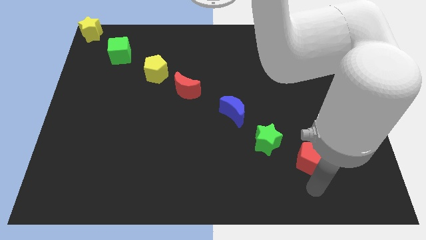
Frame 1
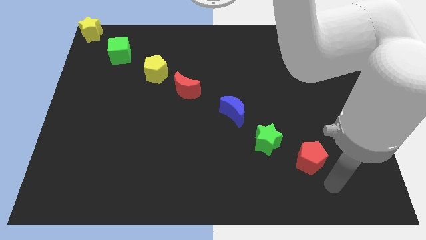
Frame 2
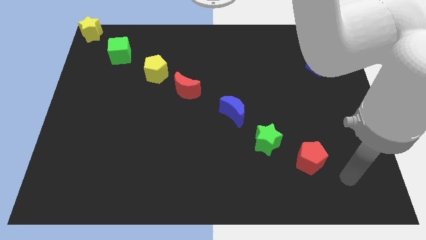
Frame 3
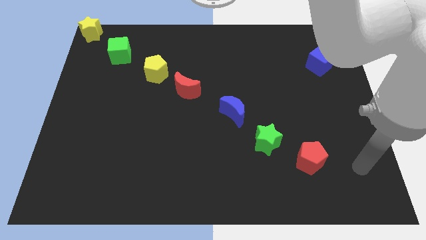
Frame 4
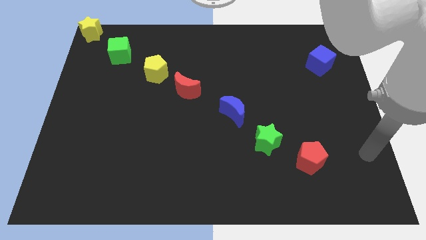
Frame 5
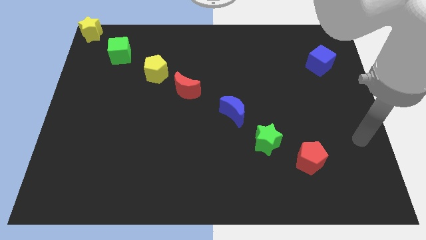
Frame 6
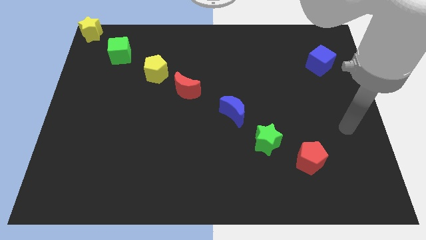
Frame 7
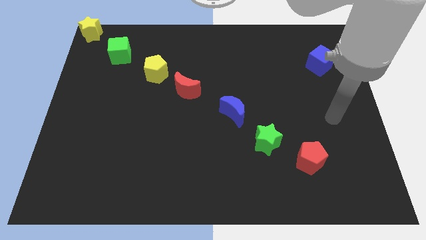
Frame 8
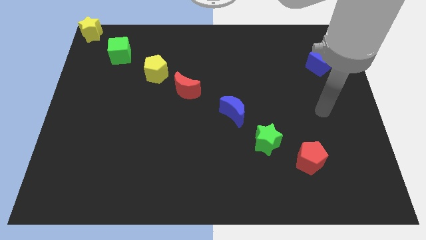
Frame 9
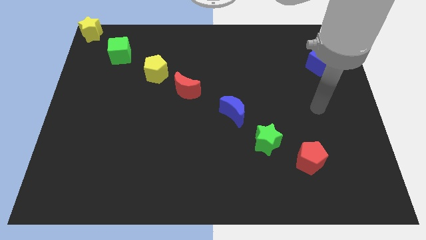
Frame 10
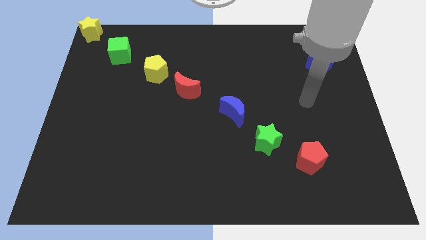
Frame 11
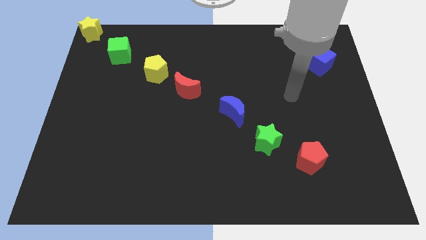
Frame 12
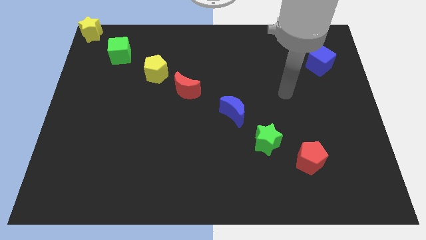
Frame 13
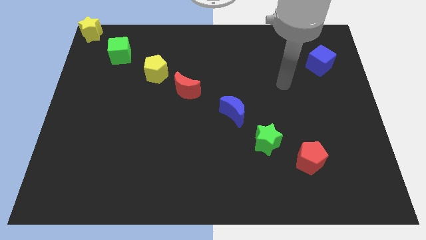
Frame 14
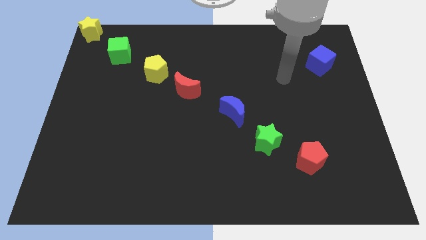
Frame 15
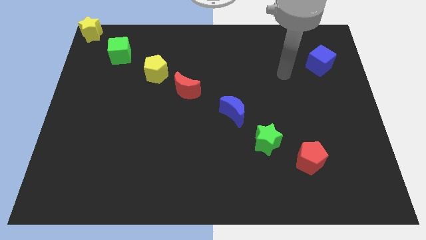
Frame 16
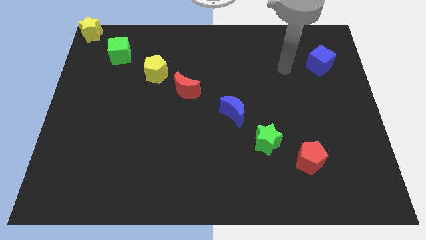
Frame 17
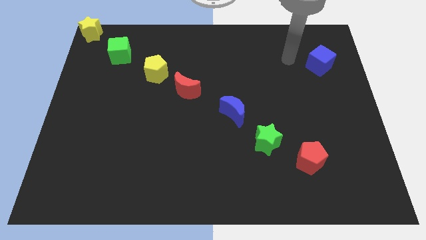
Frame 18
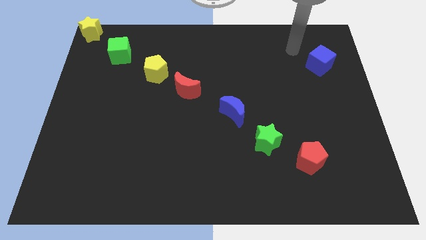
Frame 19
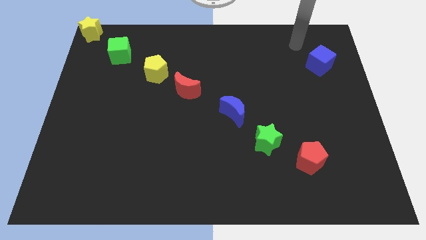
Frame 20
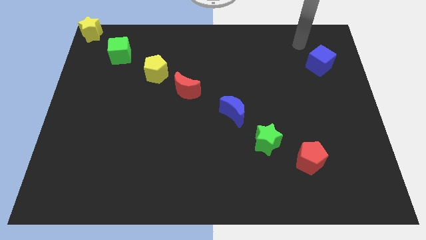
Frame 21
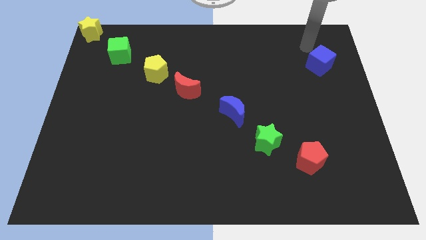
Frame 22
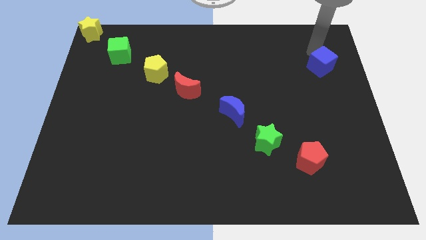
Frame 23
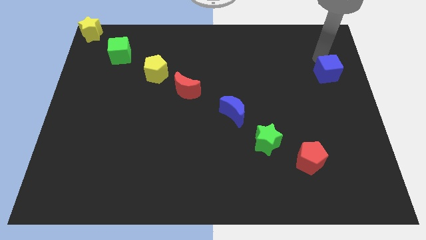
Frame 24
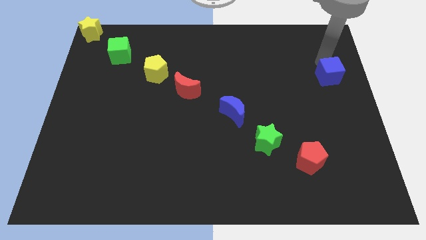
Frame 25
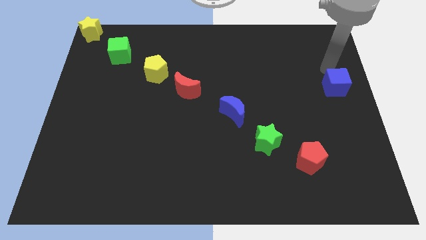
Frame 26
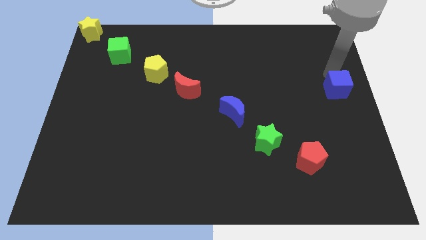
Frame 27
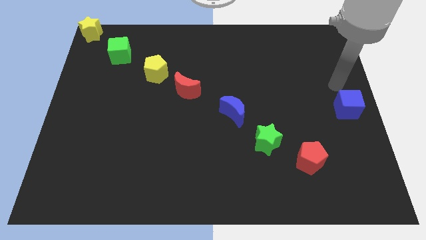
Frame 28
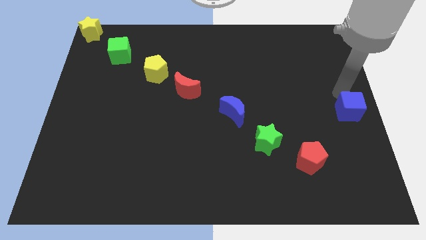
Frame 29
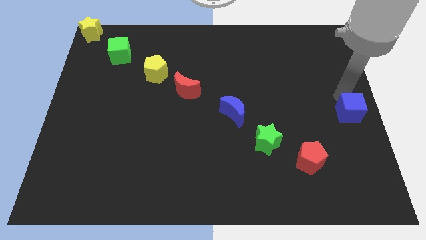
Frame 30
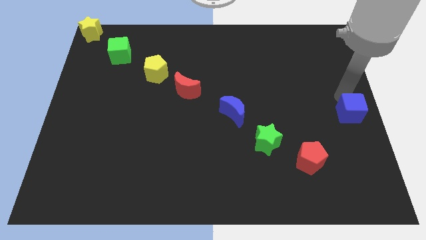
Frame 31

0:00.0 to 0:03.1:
push the blue cube to the right center of the board

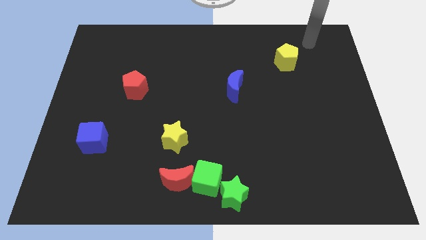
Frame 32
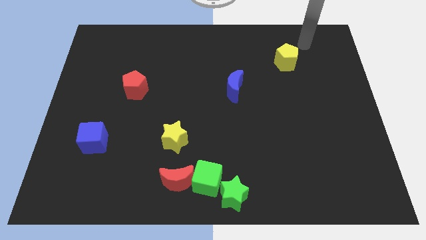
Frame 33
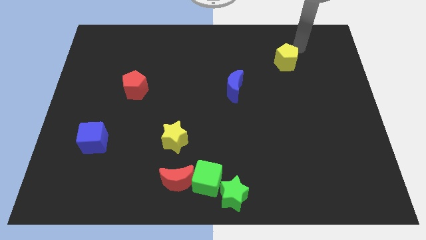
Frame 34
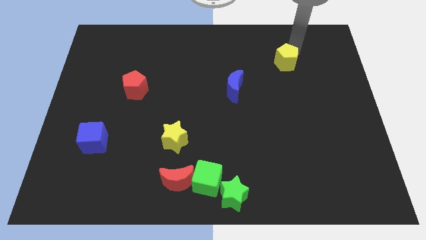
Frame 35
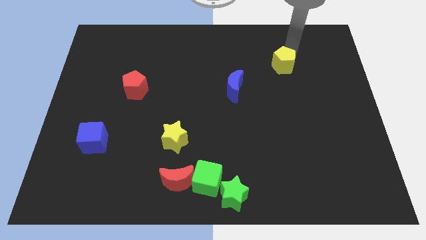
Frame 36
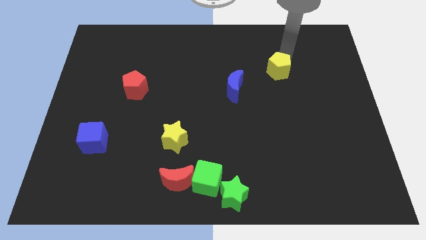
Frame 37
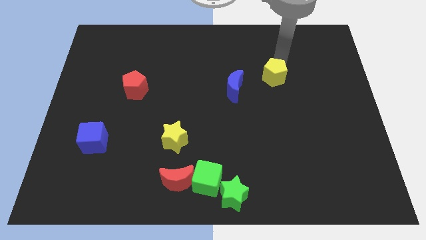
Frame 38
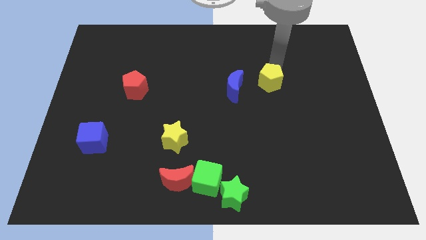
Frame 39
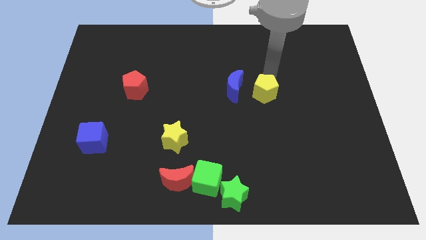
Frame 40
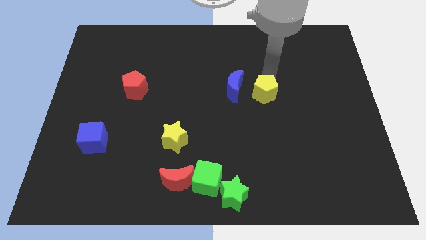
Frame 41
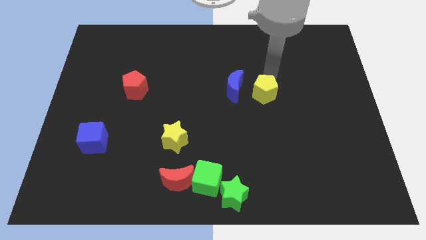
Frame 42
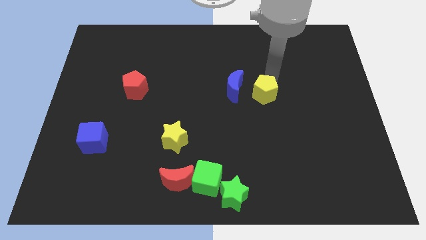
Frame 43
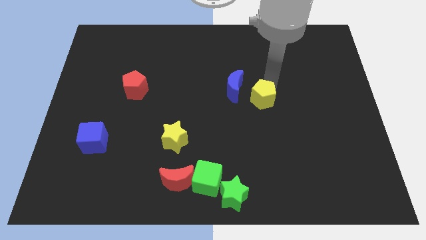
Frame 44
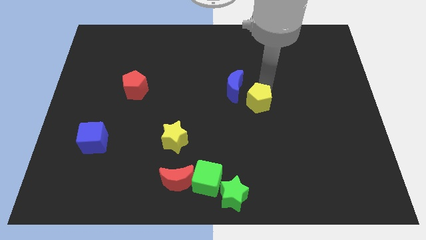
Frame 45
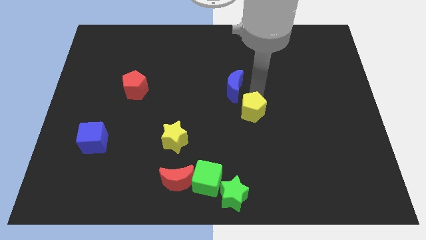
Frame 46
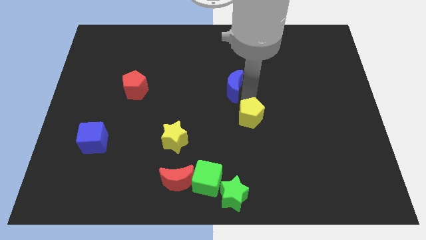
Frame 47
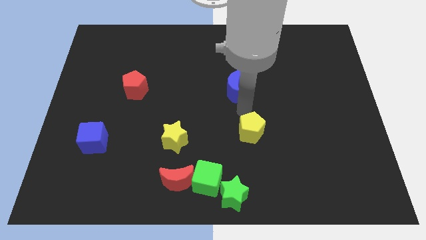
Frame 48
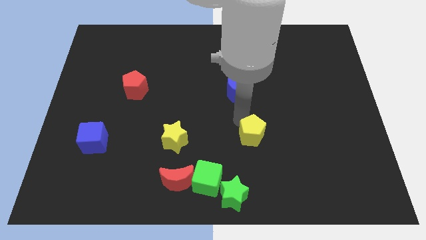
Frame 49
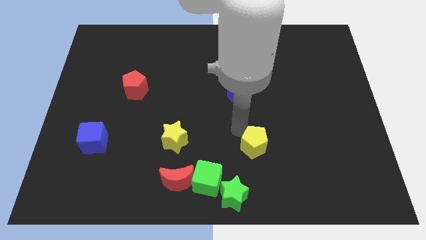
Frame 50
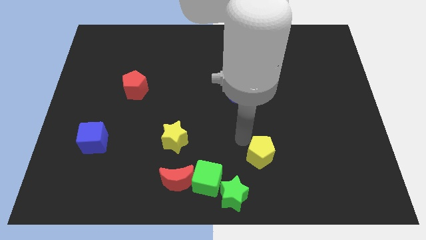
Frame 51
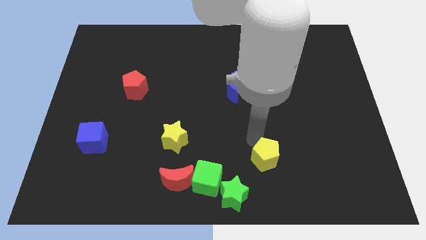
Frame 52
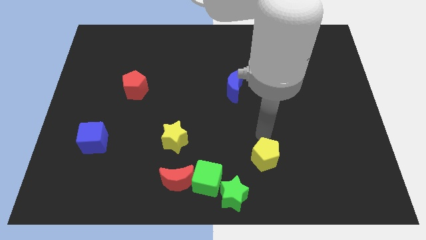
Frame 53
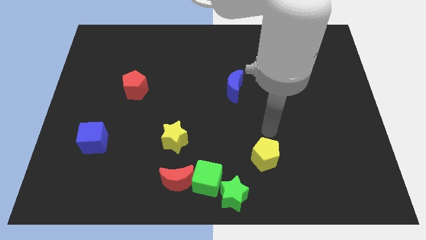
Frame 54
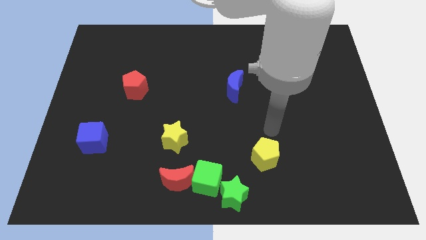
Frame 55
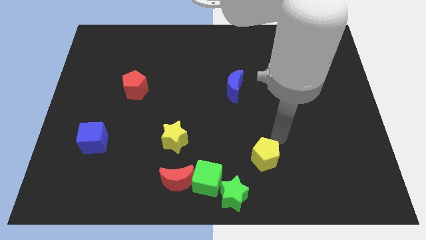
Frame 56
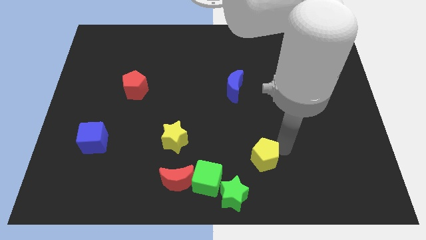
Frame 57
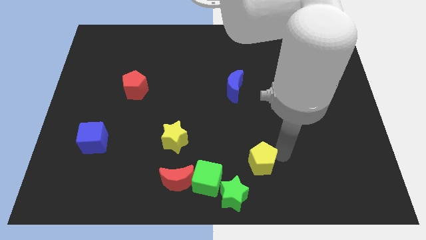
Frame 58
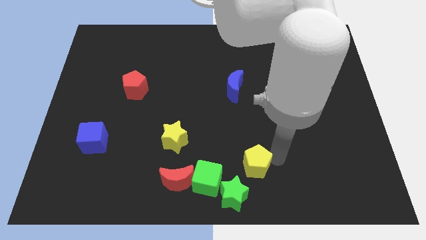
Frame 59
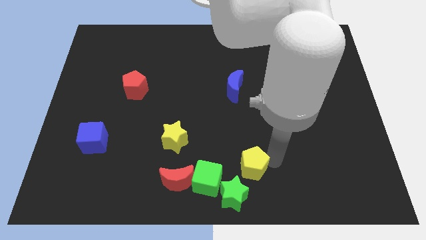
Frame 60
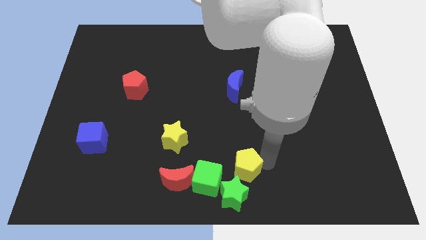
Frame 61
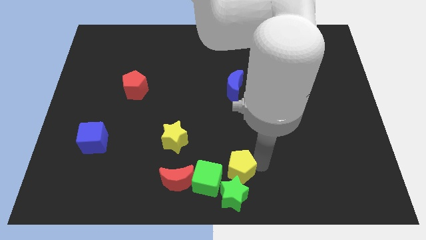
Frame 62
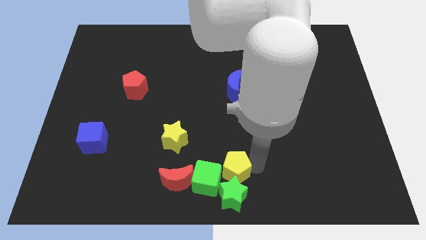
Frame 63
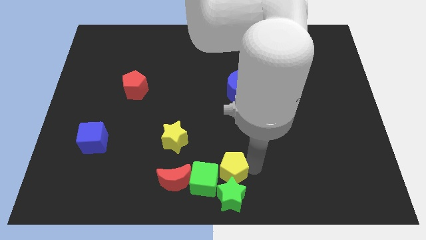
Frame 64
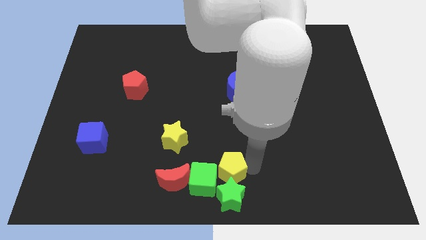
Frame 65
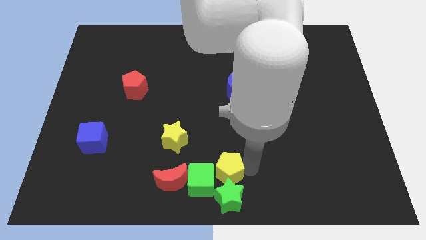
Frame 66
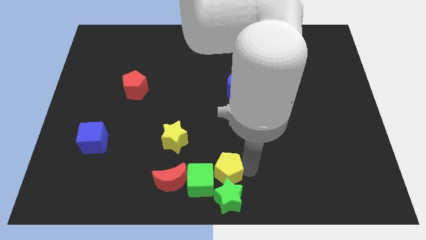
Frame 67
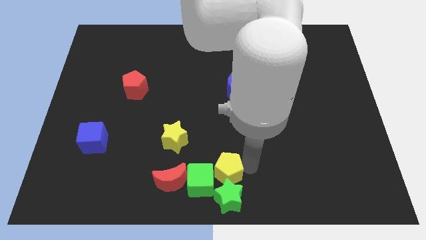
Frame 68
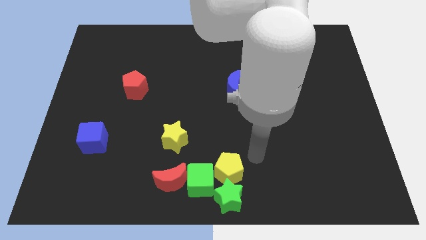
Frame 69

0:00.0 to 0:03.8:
move the yellow pentagon on top of the green star

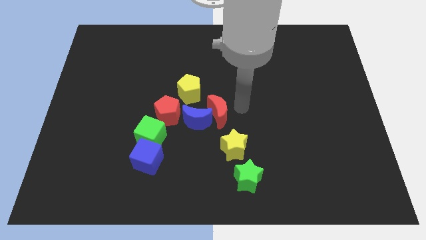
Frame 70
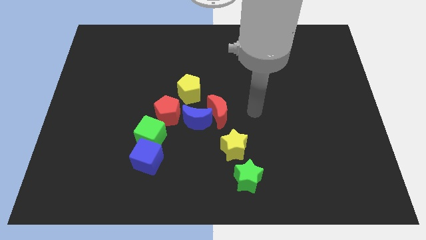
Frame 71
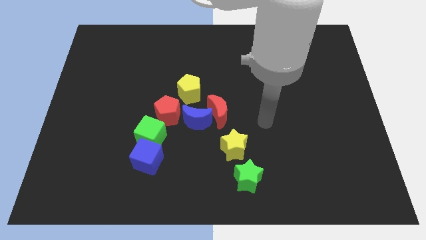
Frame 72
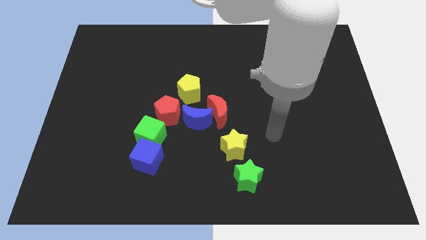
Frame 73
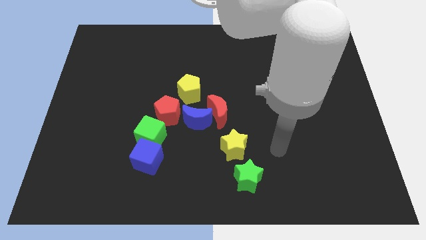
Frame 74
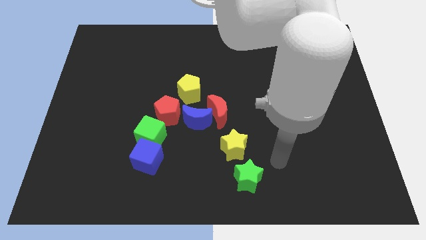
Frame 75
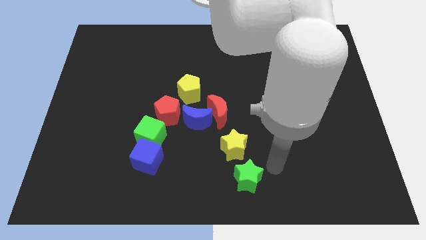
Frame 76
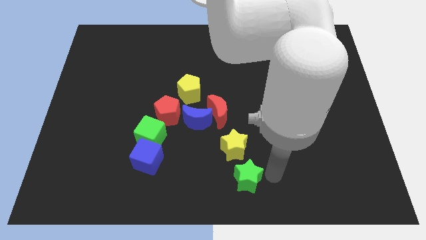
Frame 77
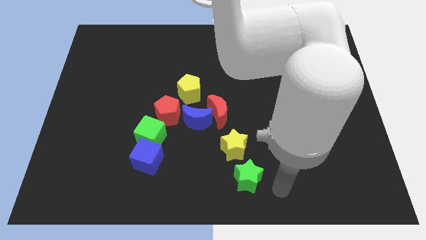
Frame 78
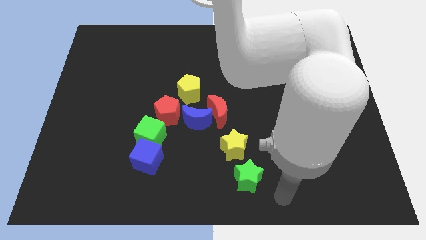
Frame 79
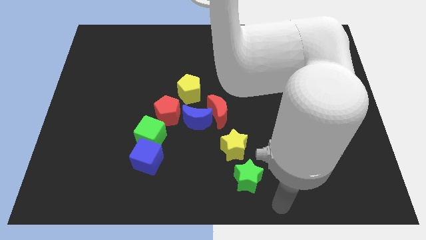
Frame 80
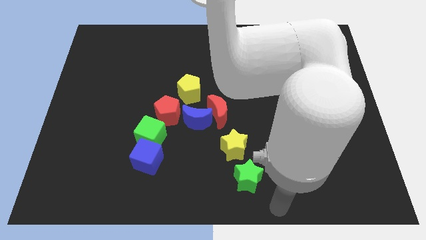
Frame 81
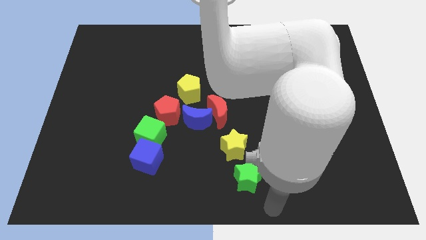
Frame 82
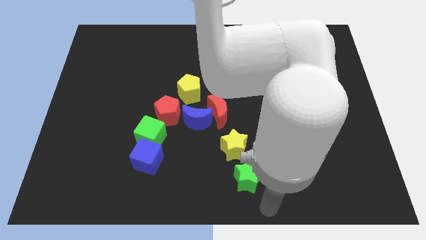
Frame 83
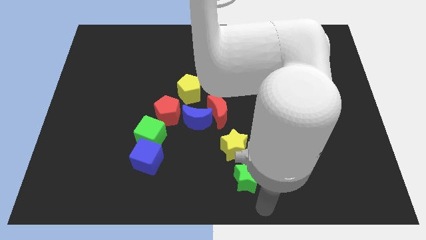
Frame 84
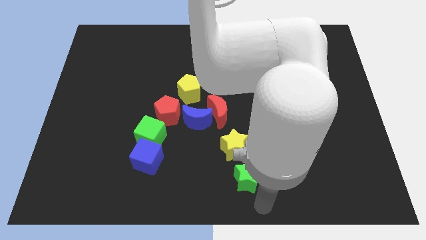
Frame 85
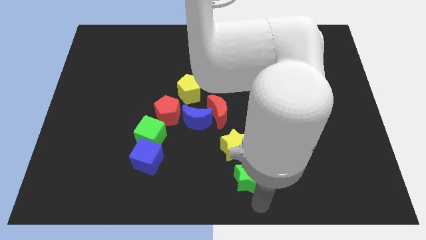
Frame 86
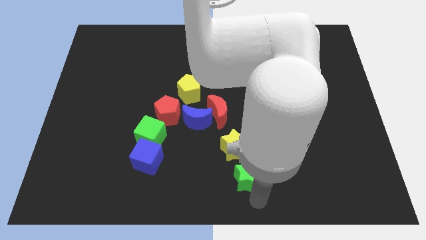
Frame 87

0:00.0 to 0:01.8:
point your arm at the bottom of the green star
